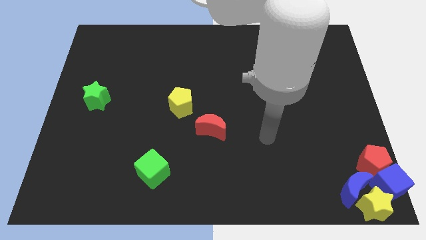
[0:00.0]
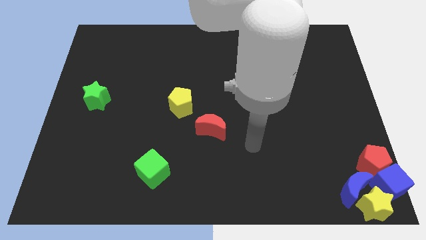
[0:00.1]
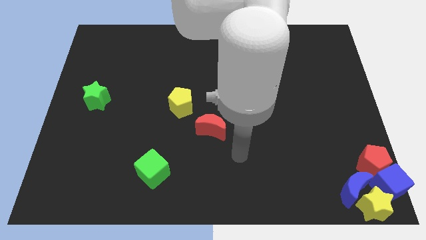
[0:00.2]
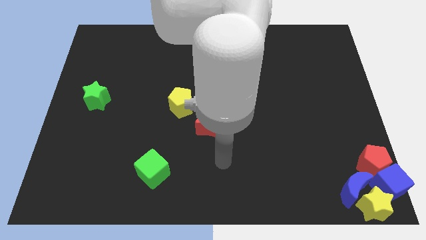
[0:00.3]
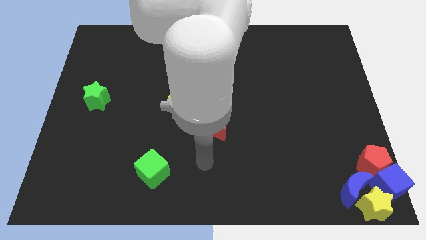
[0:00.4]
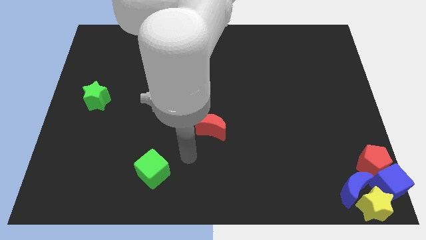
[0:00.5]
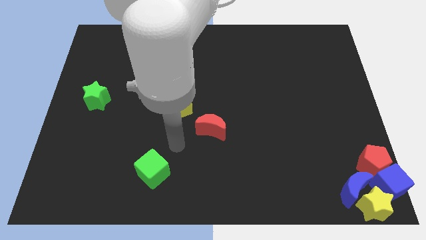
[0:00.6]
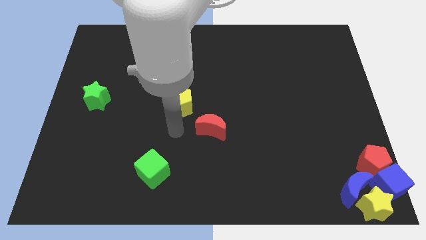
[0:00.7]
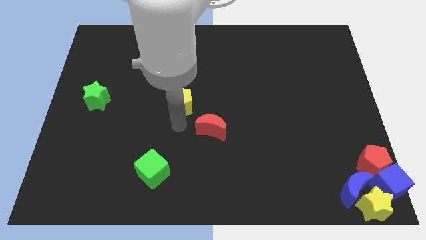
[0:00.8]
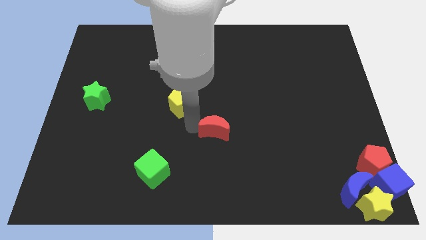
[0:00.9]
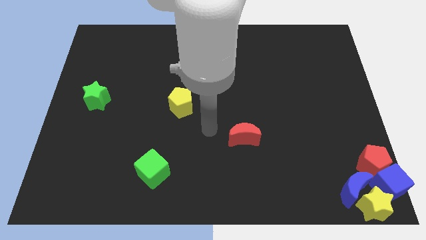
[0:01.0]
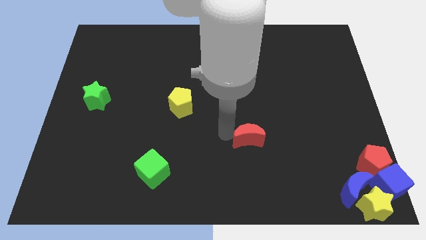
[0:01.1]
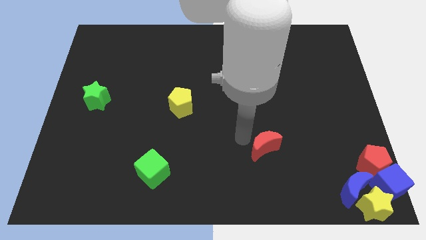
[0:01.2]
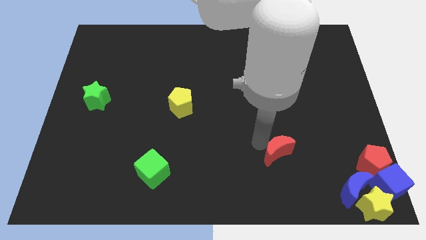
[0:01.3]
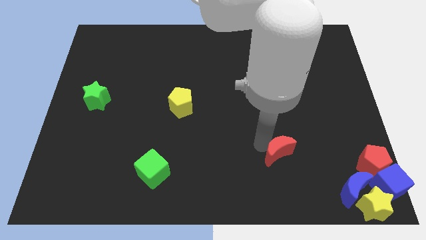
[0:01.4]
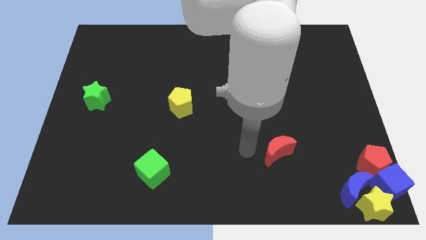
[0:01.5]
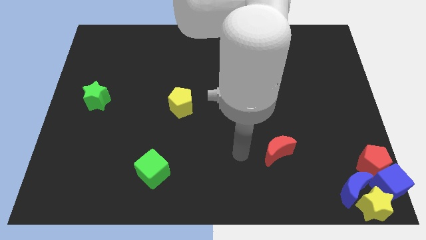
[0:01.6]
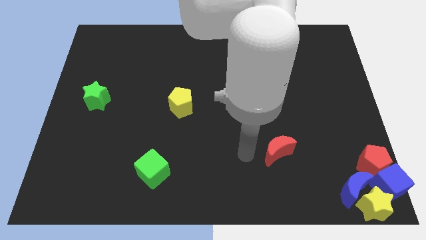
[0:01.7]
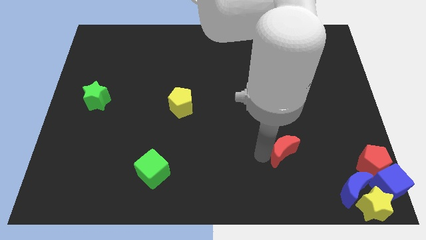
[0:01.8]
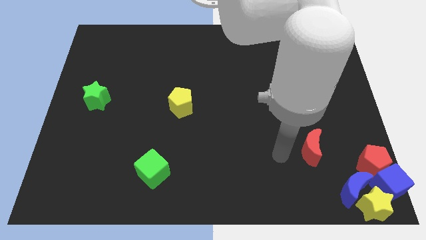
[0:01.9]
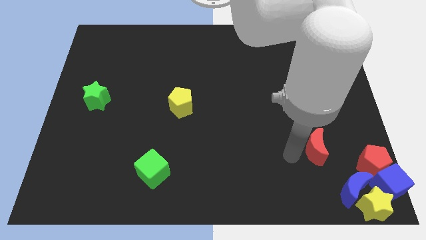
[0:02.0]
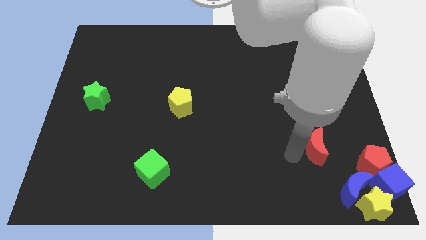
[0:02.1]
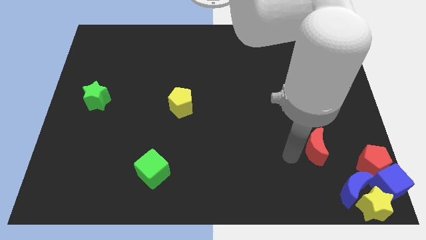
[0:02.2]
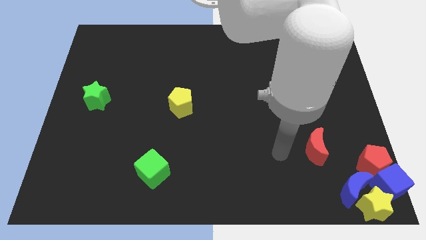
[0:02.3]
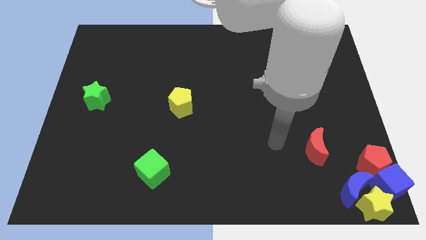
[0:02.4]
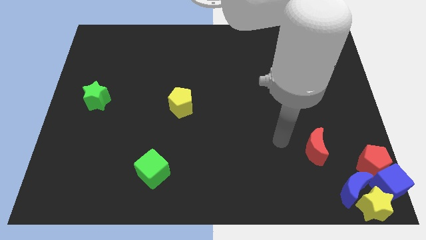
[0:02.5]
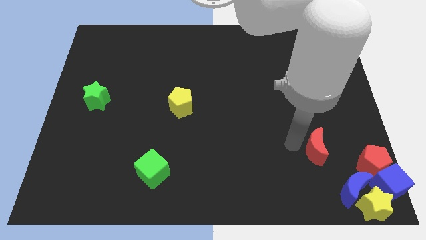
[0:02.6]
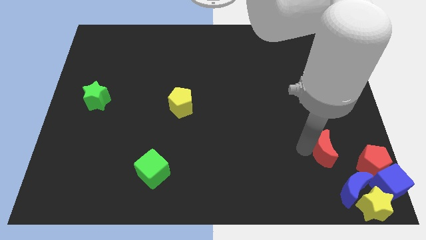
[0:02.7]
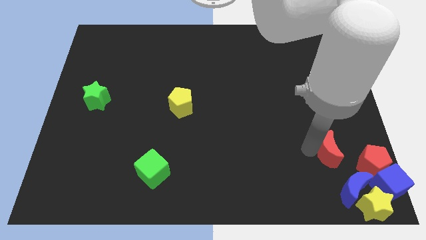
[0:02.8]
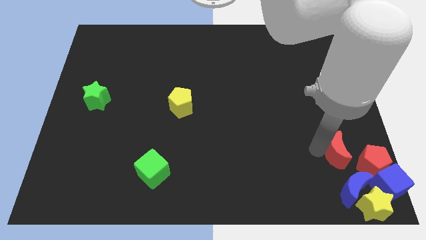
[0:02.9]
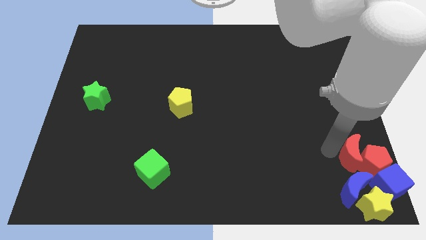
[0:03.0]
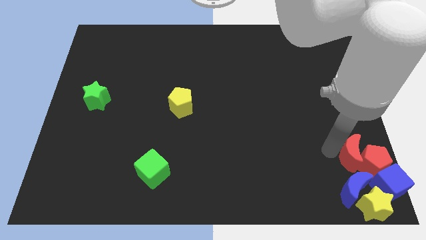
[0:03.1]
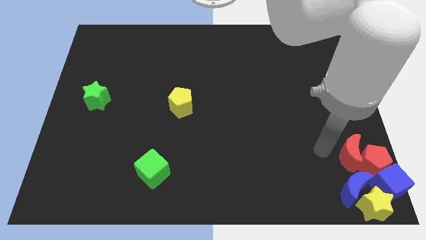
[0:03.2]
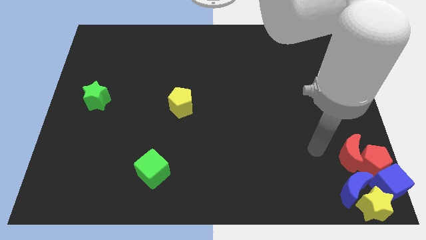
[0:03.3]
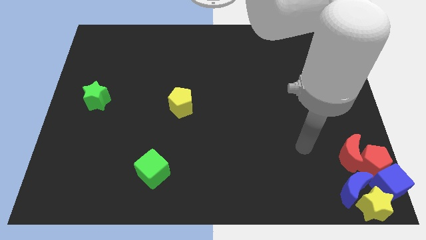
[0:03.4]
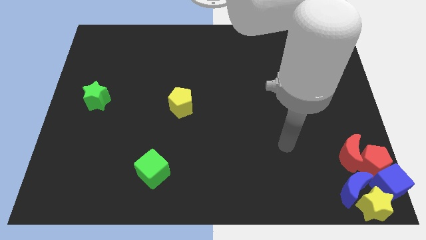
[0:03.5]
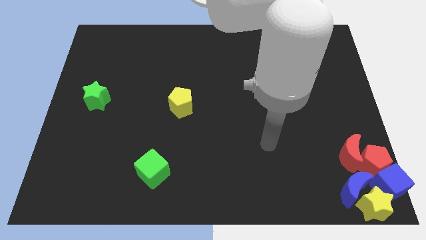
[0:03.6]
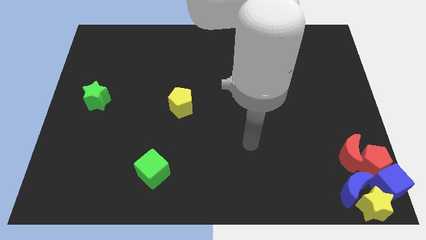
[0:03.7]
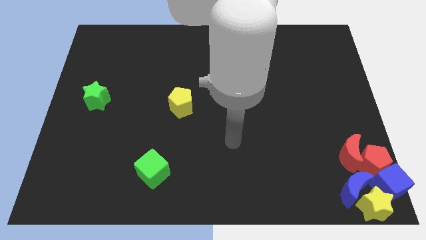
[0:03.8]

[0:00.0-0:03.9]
push the red moon into red pentagon

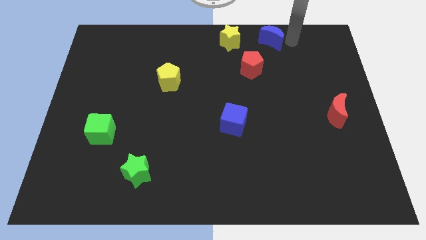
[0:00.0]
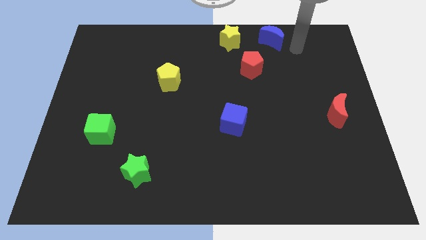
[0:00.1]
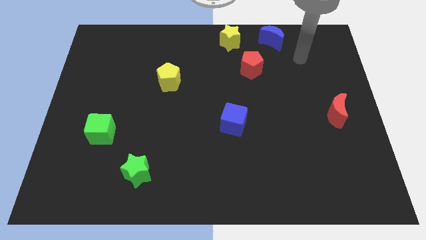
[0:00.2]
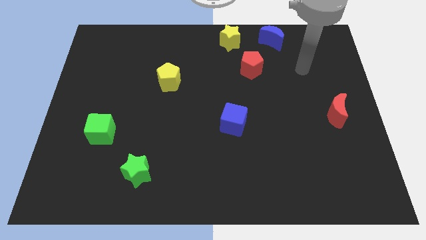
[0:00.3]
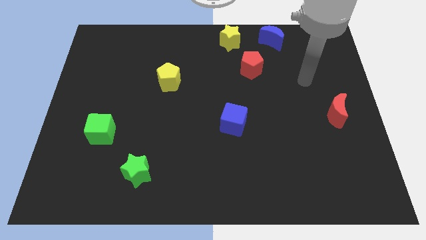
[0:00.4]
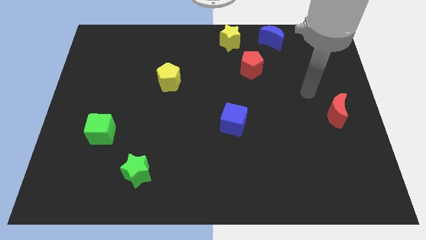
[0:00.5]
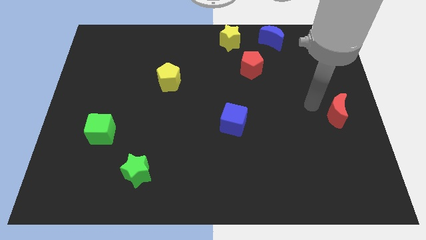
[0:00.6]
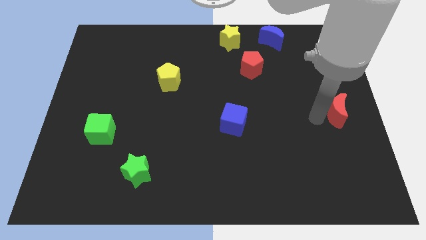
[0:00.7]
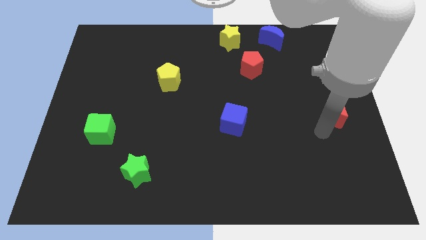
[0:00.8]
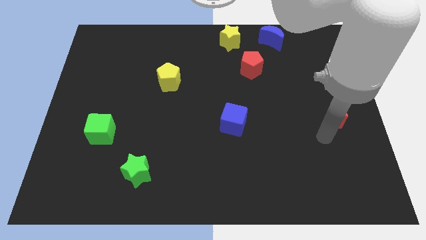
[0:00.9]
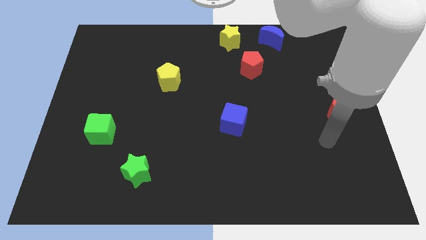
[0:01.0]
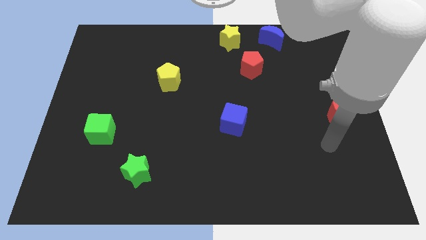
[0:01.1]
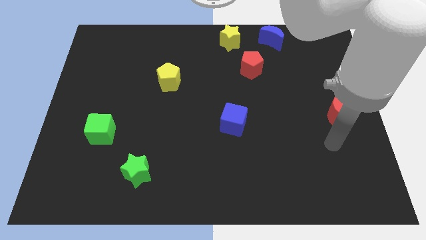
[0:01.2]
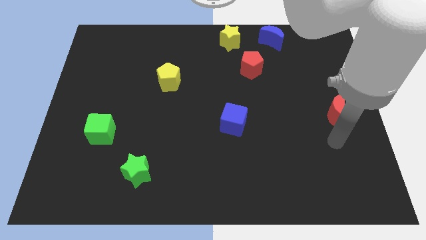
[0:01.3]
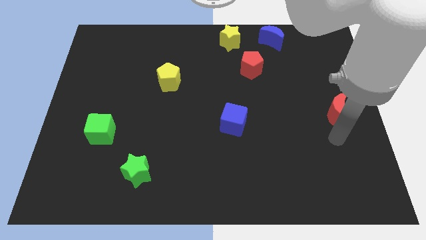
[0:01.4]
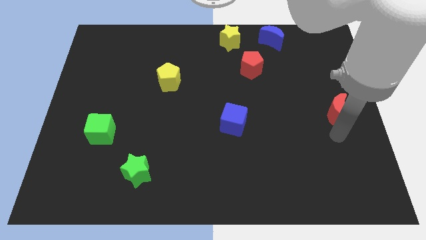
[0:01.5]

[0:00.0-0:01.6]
point the arm at the bottom side of the red crescent

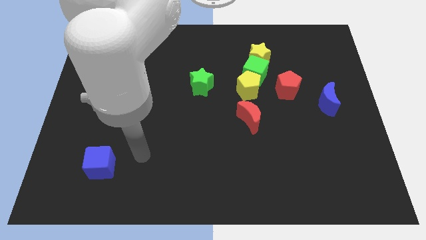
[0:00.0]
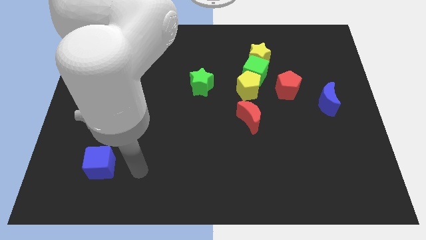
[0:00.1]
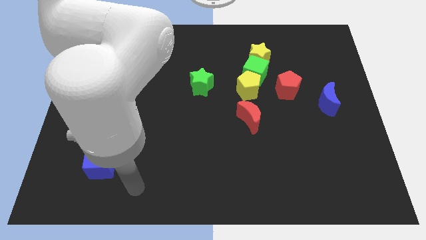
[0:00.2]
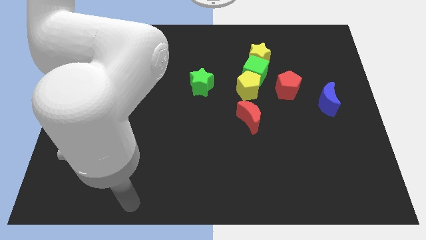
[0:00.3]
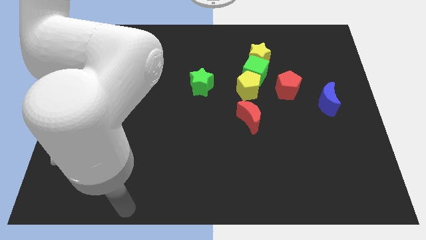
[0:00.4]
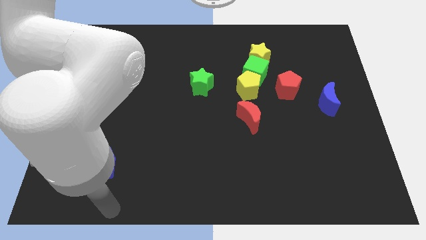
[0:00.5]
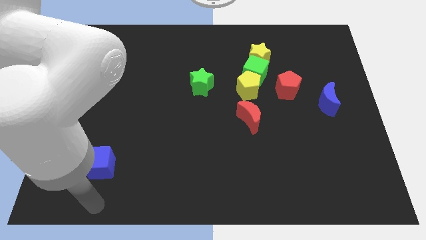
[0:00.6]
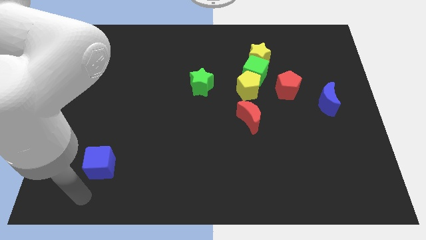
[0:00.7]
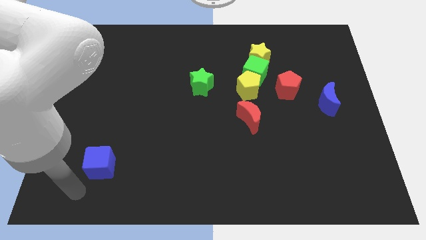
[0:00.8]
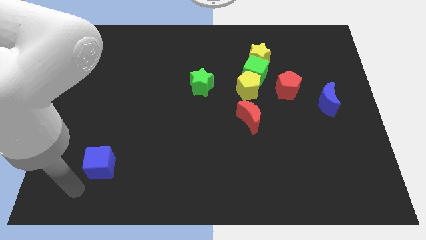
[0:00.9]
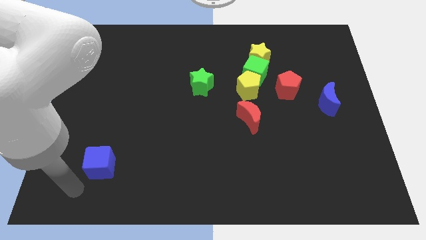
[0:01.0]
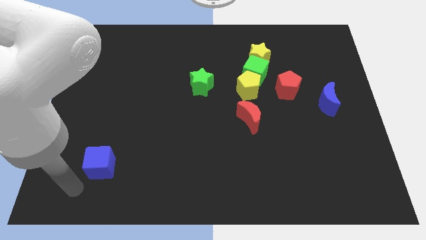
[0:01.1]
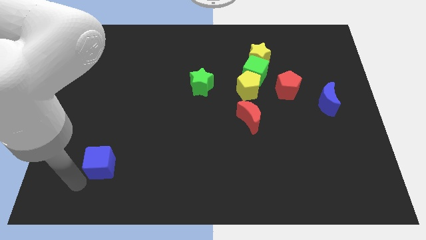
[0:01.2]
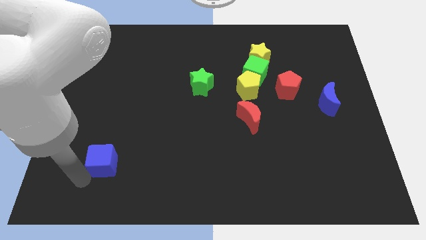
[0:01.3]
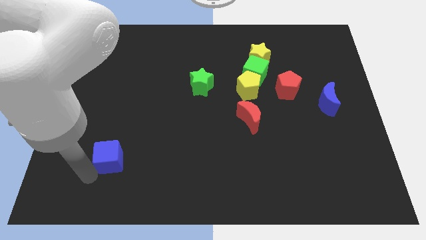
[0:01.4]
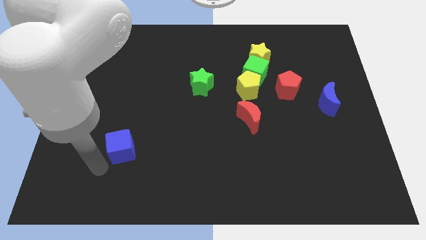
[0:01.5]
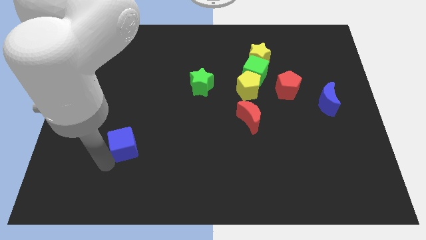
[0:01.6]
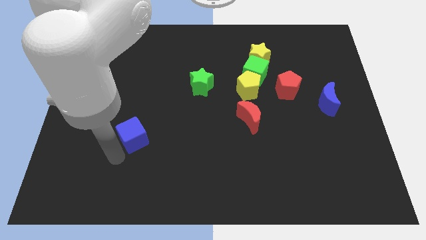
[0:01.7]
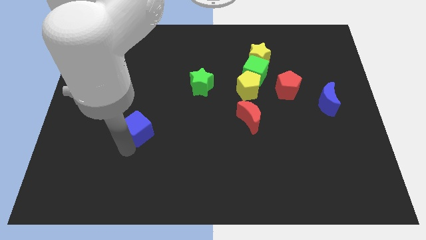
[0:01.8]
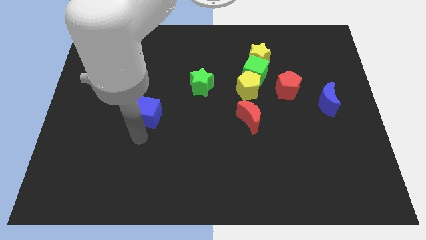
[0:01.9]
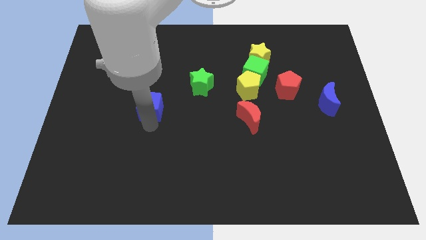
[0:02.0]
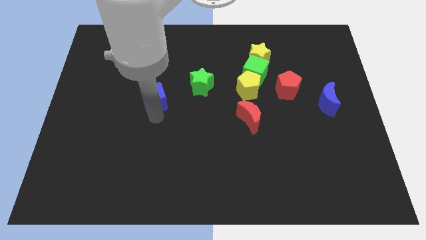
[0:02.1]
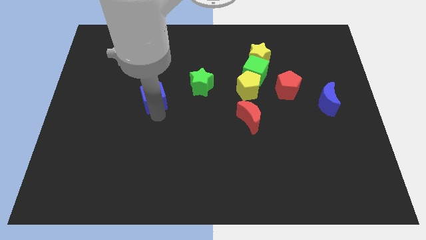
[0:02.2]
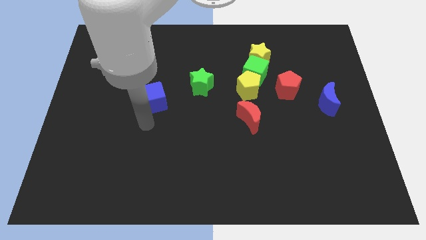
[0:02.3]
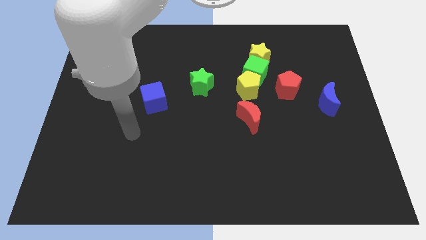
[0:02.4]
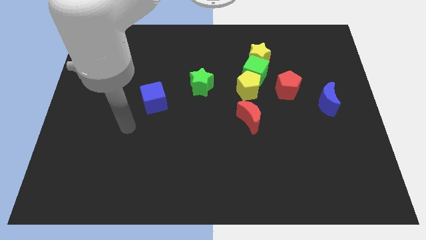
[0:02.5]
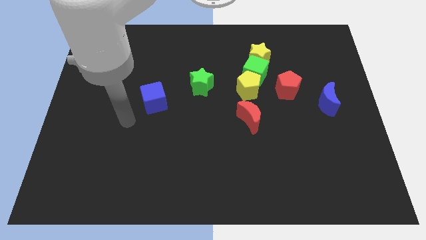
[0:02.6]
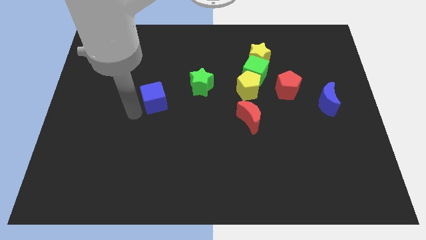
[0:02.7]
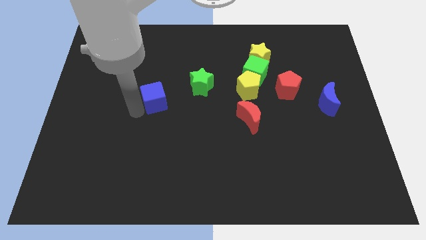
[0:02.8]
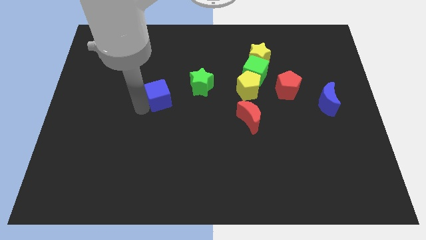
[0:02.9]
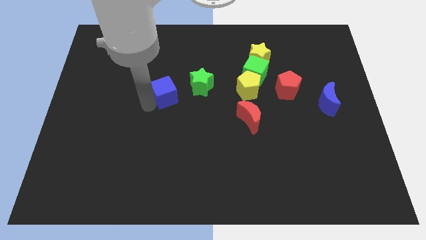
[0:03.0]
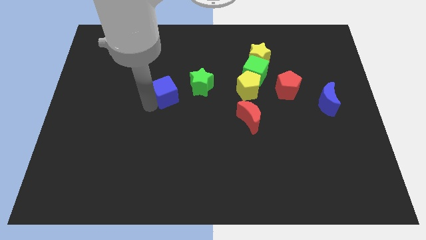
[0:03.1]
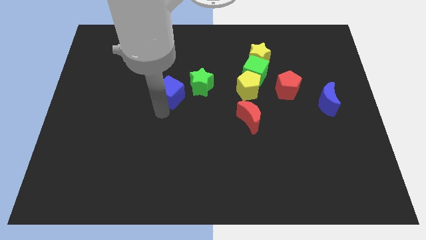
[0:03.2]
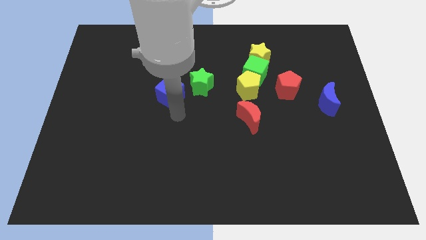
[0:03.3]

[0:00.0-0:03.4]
place the blue cube diagonally bottom left to green star

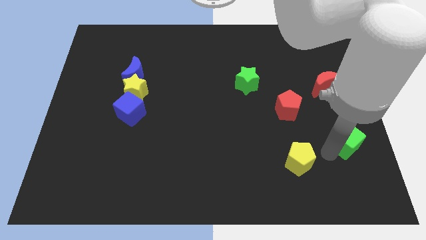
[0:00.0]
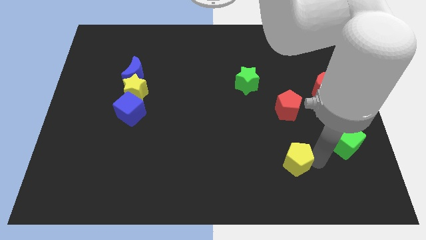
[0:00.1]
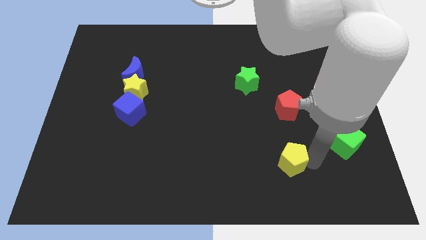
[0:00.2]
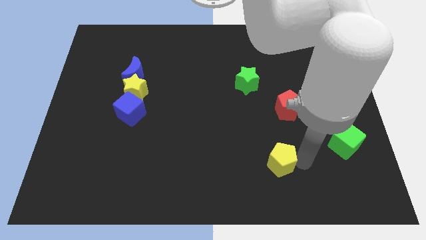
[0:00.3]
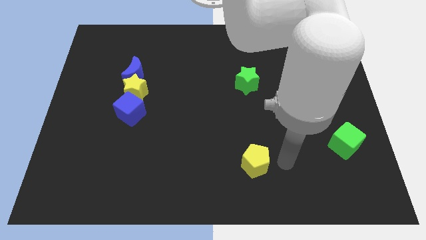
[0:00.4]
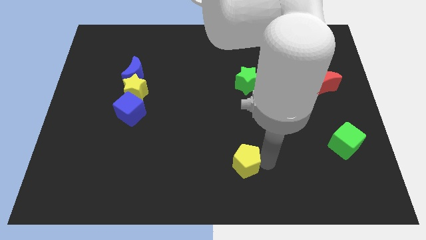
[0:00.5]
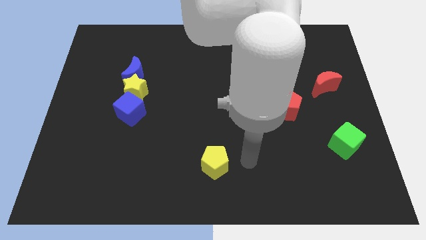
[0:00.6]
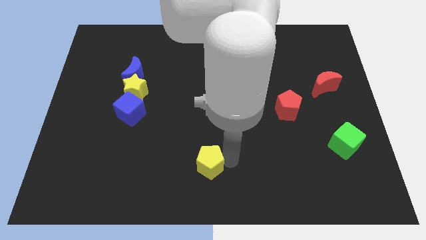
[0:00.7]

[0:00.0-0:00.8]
move the yellow pentagon towards the bottom center of the board
